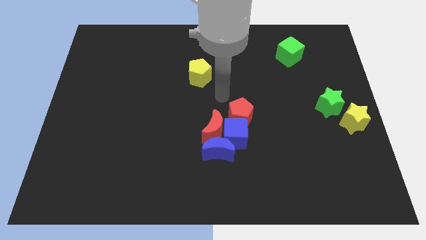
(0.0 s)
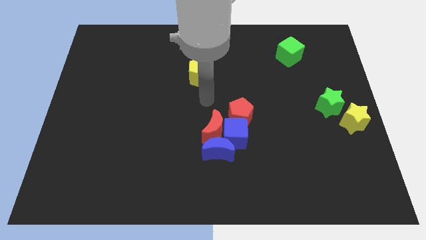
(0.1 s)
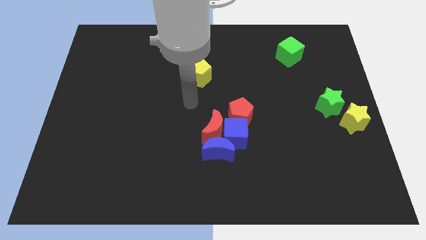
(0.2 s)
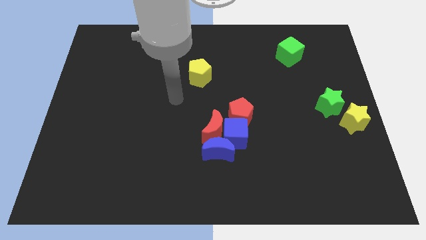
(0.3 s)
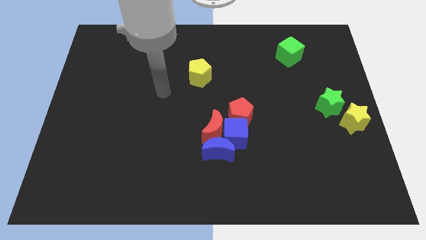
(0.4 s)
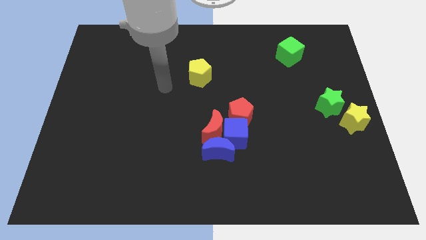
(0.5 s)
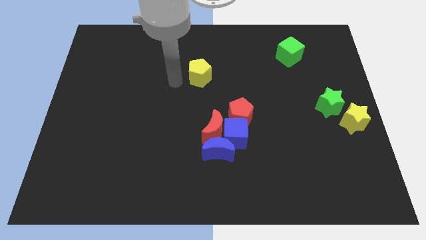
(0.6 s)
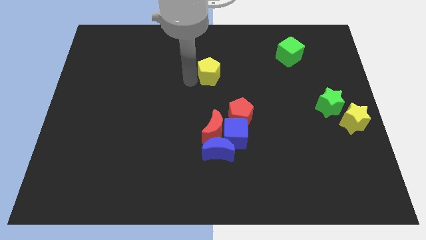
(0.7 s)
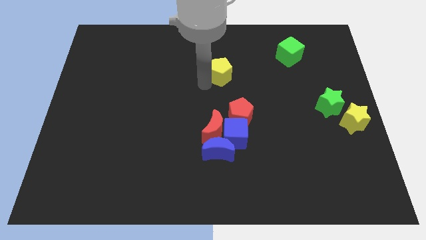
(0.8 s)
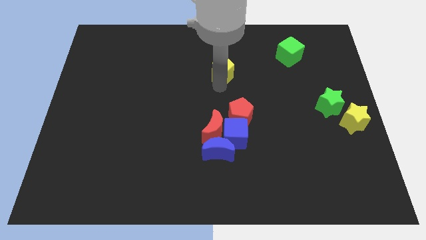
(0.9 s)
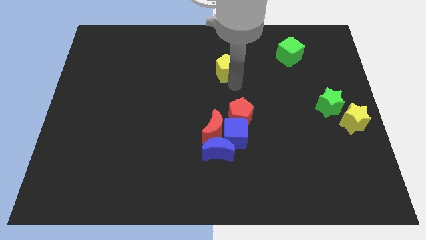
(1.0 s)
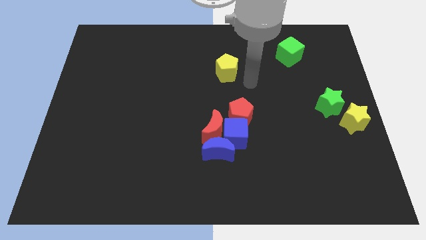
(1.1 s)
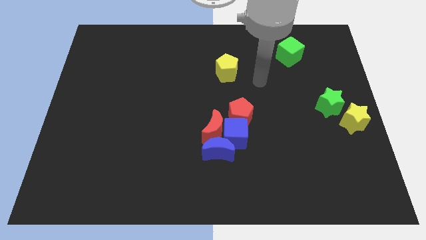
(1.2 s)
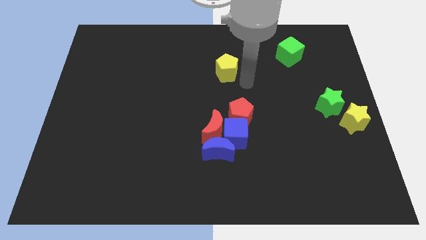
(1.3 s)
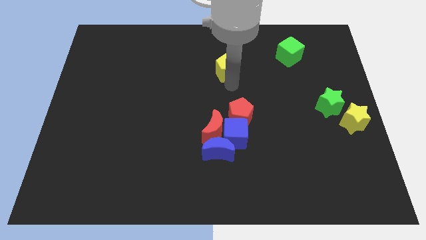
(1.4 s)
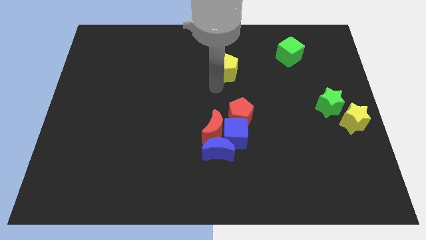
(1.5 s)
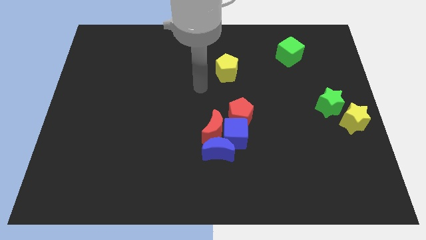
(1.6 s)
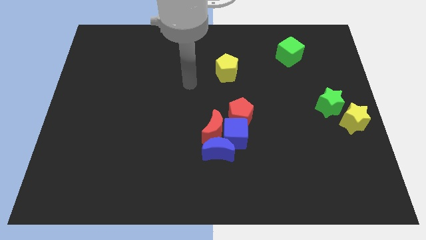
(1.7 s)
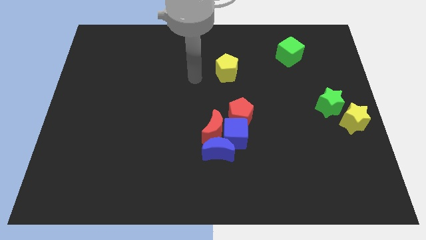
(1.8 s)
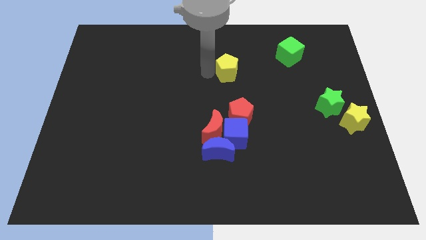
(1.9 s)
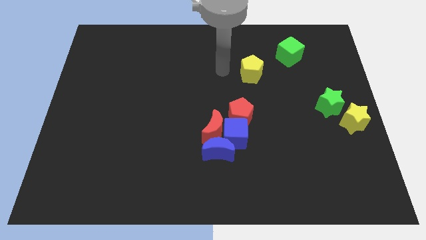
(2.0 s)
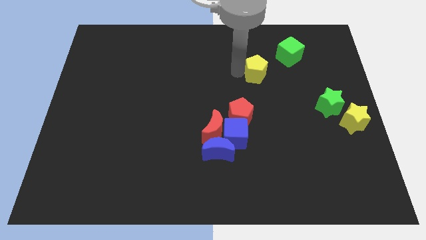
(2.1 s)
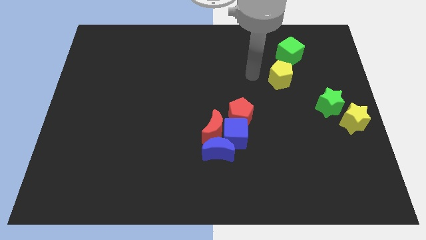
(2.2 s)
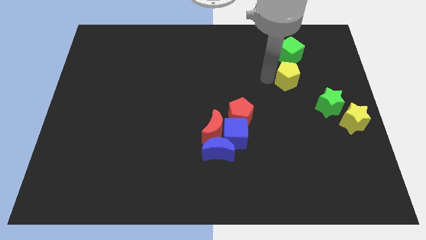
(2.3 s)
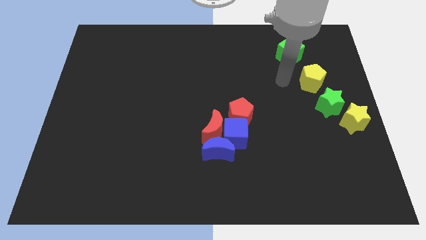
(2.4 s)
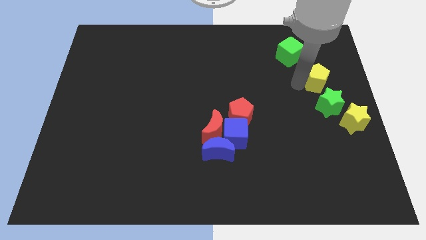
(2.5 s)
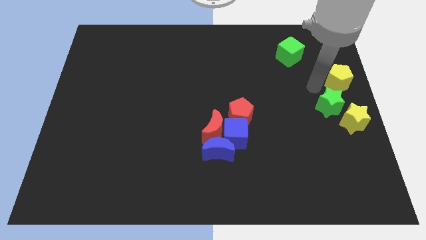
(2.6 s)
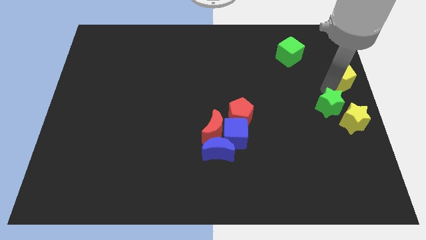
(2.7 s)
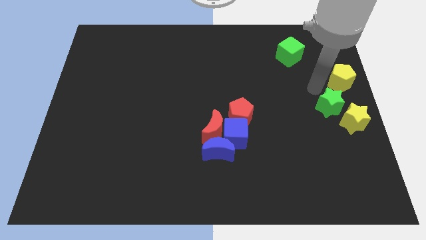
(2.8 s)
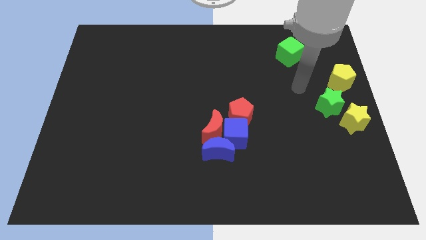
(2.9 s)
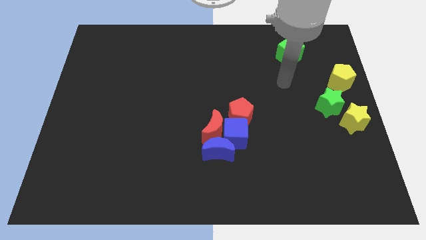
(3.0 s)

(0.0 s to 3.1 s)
put the yellow pentagon vertically above the yellow star

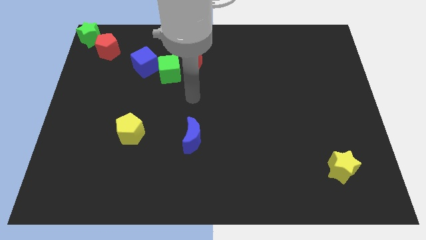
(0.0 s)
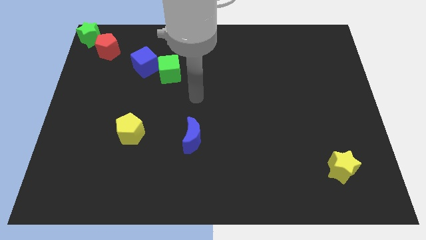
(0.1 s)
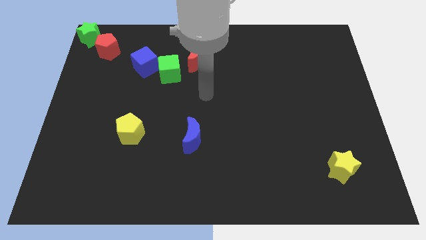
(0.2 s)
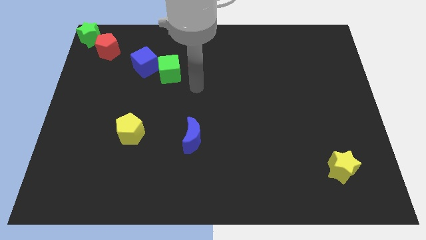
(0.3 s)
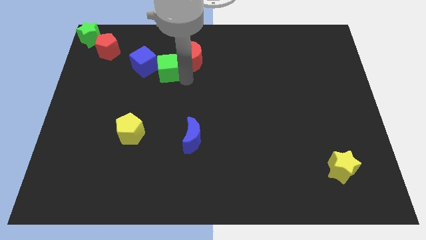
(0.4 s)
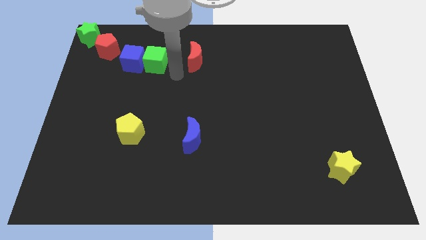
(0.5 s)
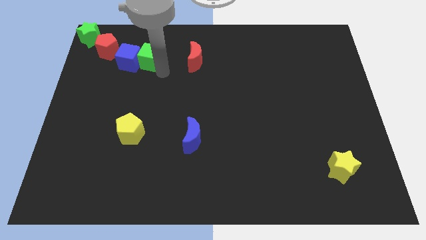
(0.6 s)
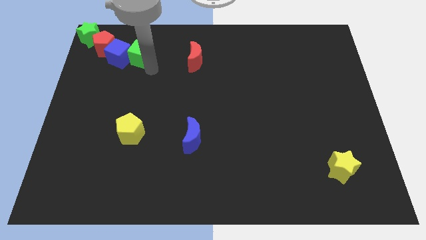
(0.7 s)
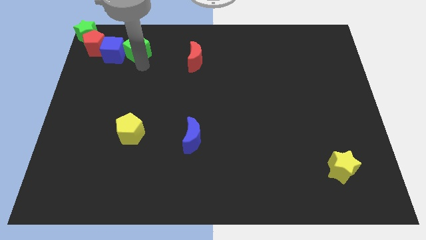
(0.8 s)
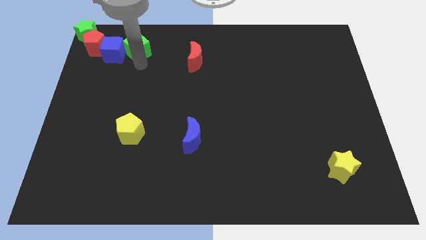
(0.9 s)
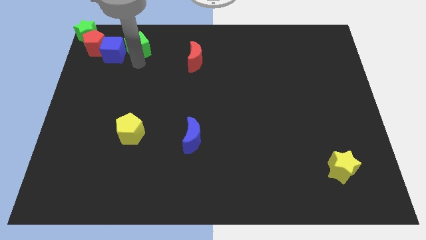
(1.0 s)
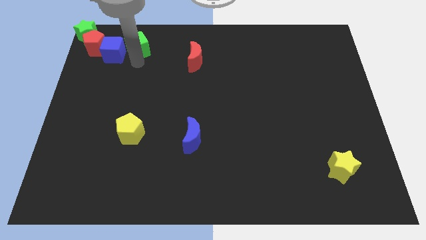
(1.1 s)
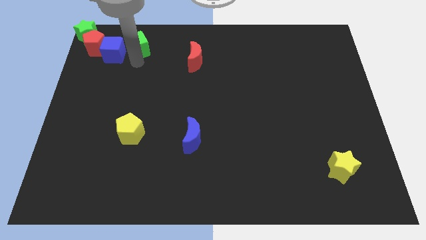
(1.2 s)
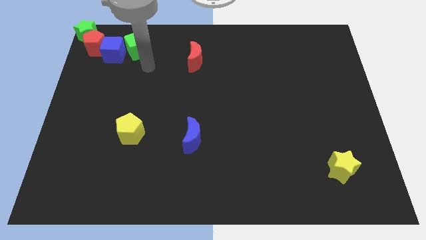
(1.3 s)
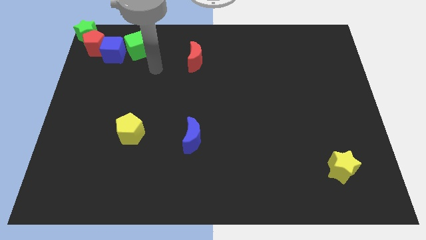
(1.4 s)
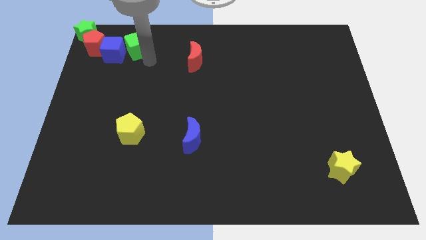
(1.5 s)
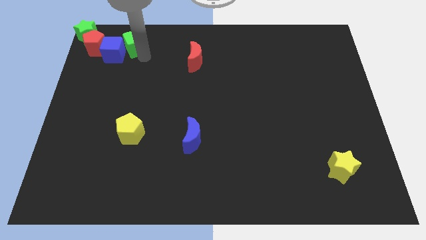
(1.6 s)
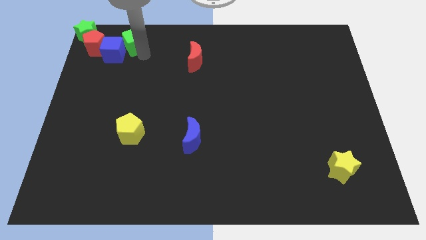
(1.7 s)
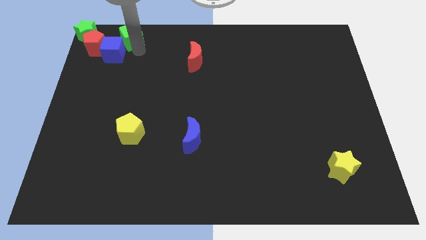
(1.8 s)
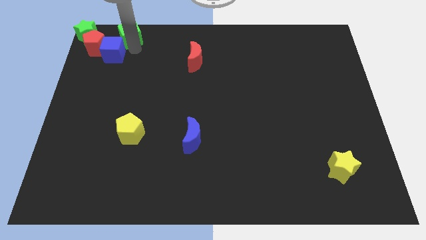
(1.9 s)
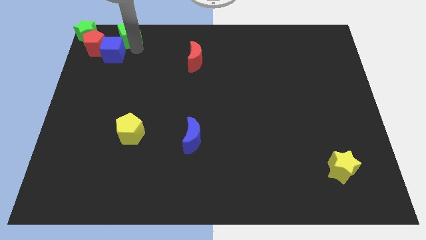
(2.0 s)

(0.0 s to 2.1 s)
move green cube into the group of blocks

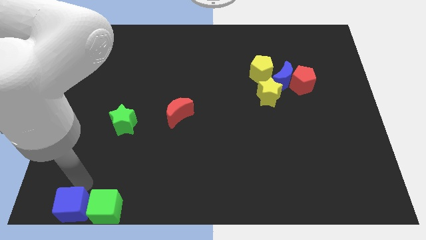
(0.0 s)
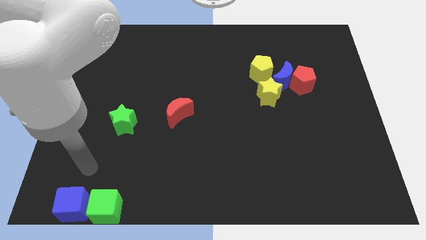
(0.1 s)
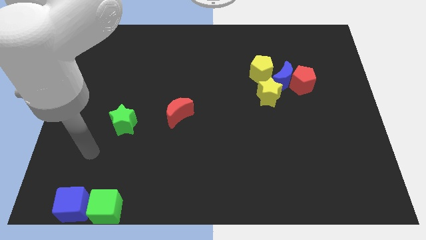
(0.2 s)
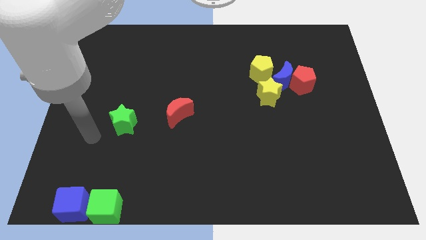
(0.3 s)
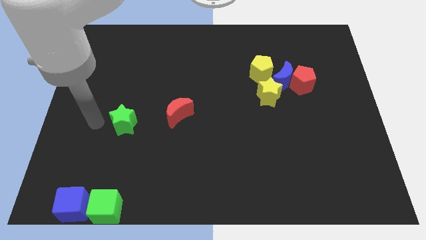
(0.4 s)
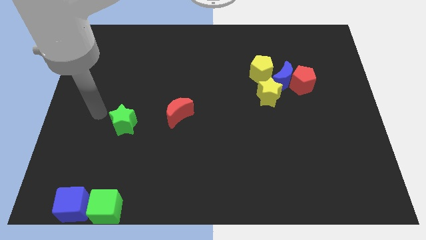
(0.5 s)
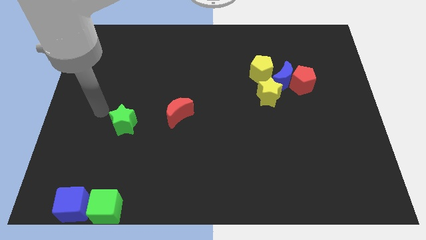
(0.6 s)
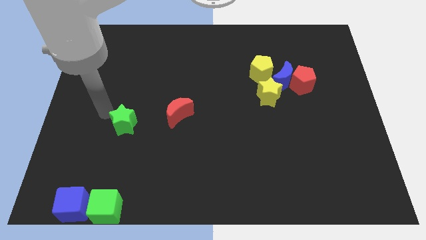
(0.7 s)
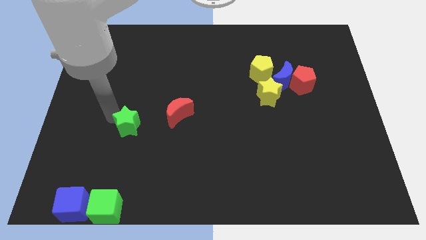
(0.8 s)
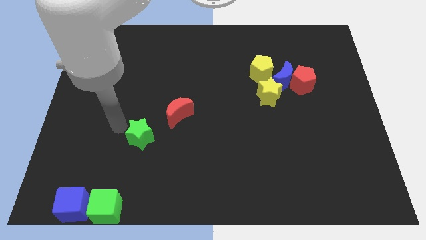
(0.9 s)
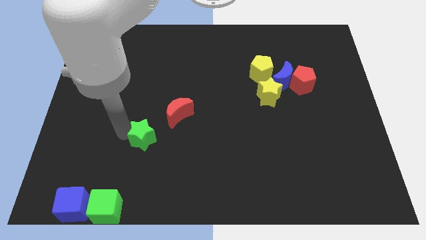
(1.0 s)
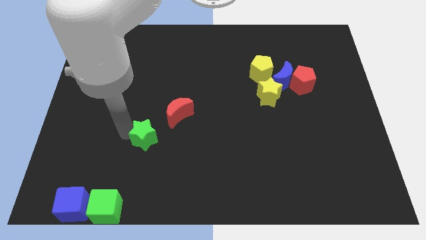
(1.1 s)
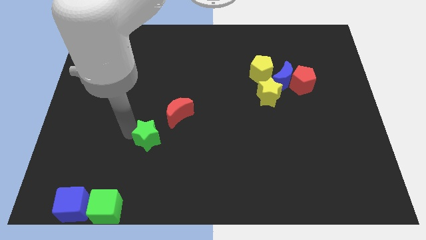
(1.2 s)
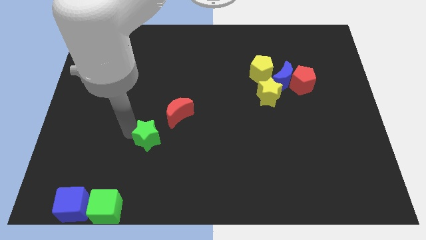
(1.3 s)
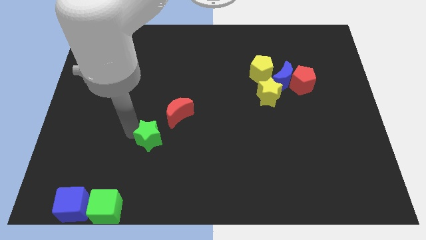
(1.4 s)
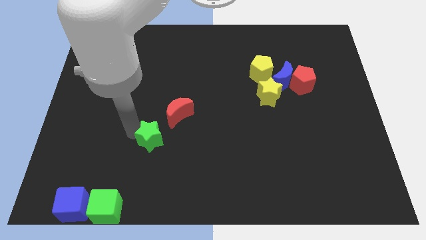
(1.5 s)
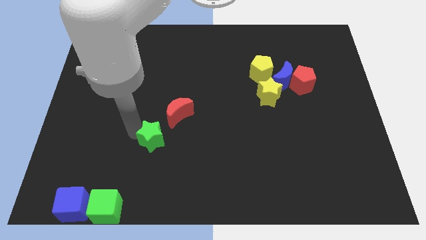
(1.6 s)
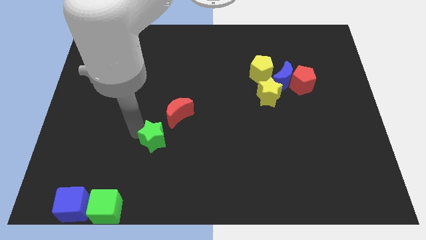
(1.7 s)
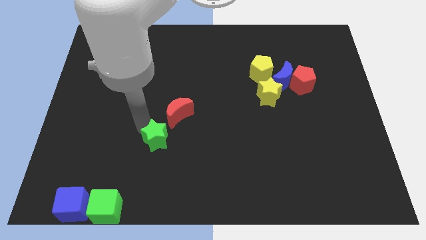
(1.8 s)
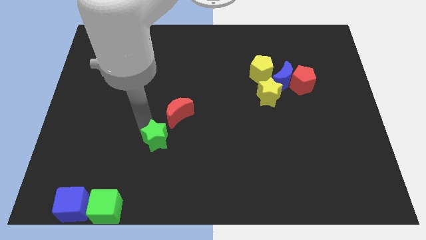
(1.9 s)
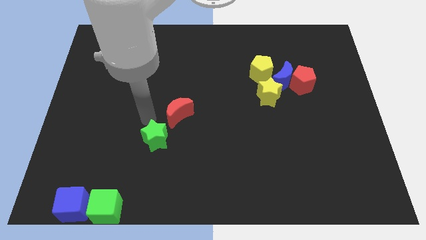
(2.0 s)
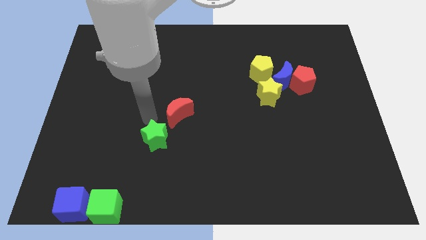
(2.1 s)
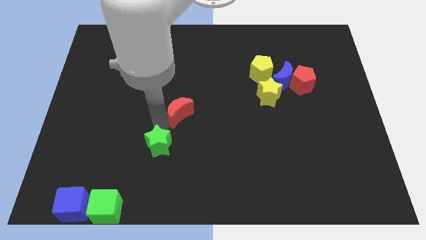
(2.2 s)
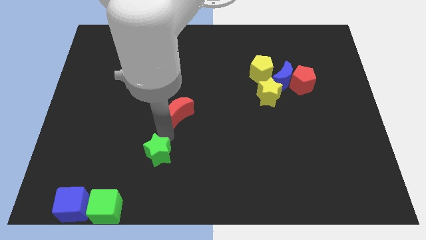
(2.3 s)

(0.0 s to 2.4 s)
move the green star to the bottom of the red crescent

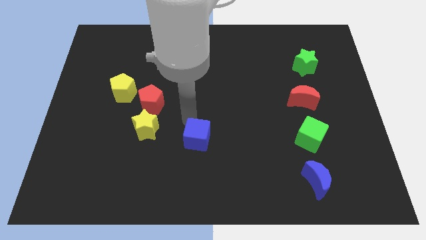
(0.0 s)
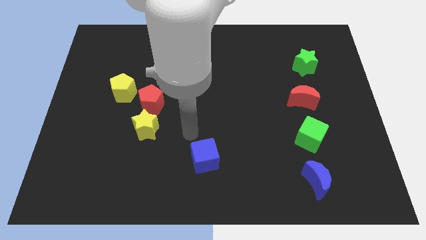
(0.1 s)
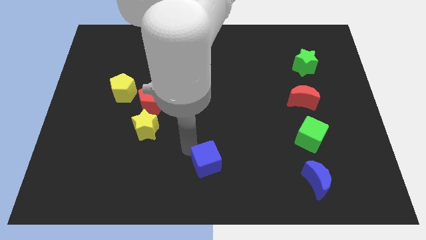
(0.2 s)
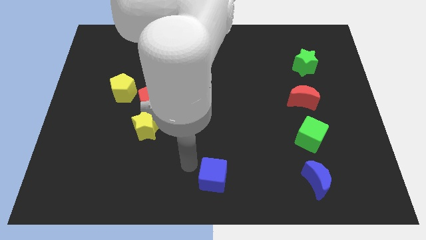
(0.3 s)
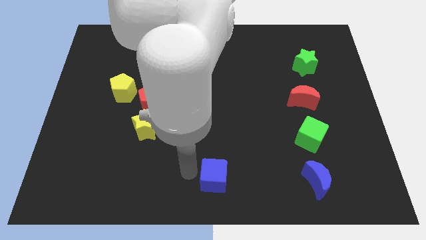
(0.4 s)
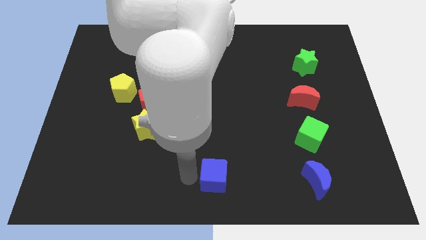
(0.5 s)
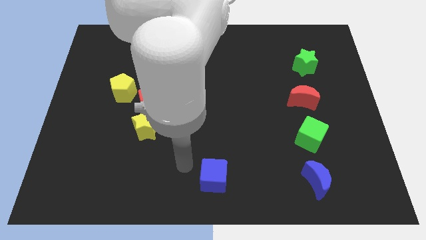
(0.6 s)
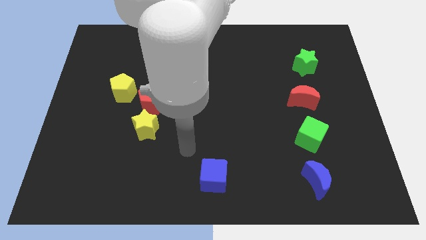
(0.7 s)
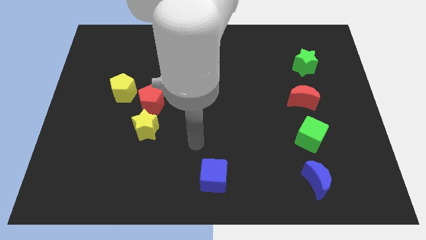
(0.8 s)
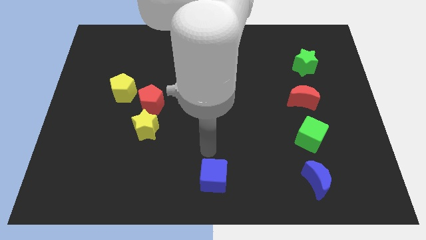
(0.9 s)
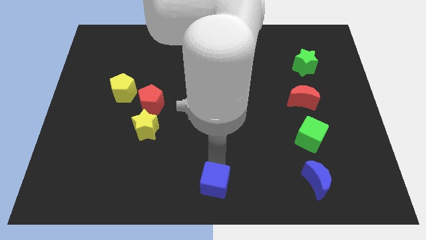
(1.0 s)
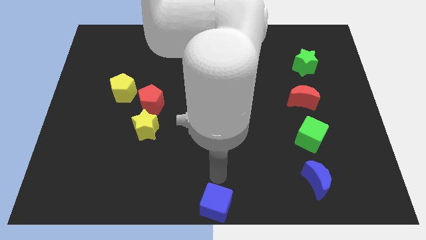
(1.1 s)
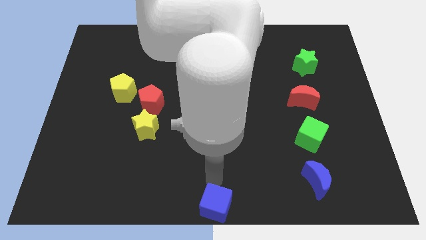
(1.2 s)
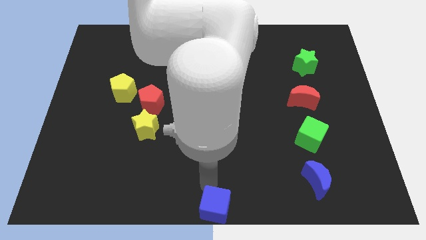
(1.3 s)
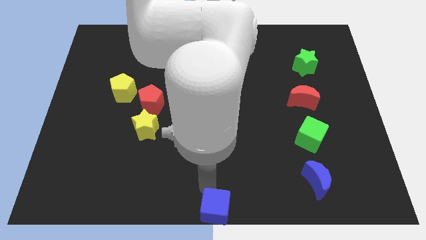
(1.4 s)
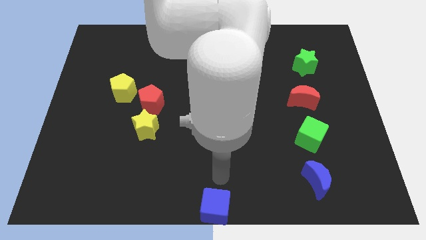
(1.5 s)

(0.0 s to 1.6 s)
move the blue cube to the bottom center of the board
